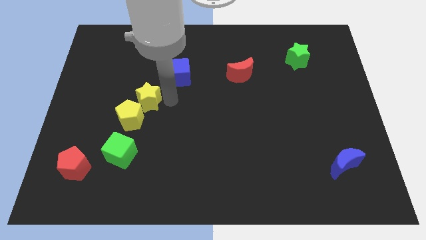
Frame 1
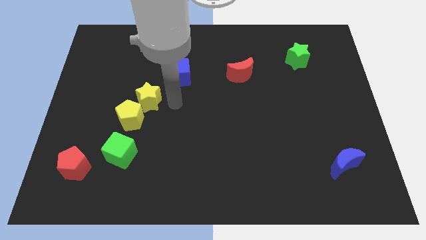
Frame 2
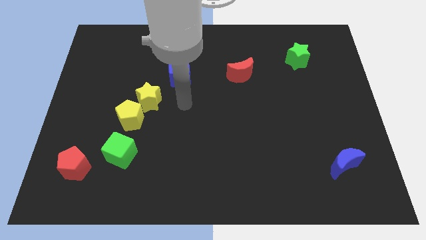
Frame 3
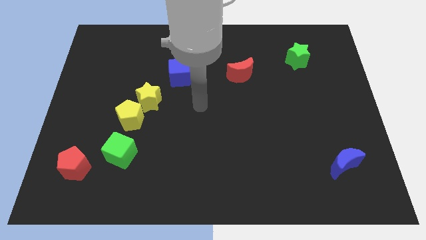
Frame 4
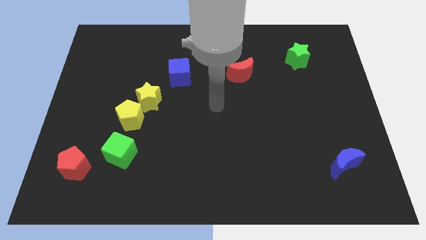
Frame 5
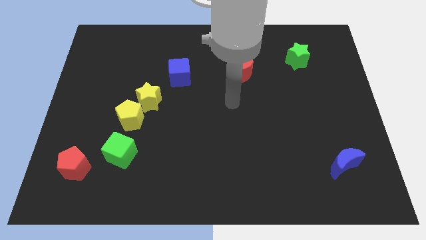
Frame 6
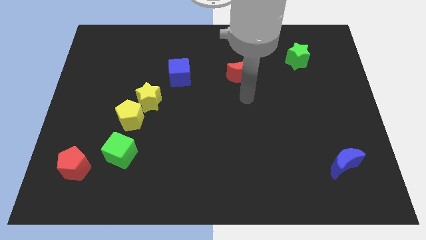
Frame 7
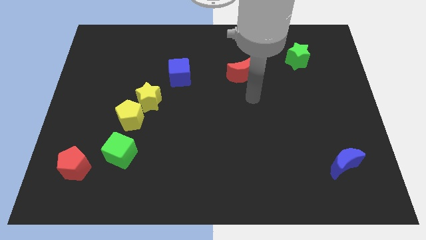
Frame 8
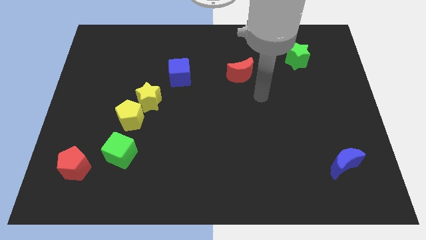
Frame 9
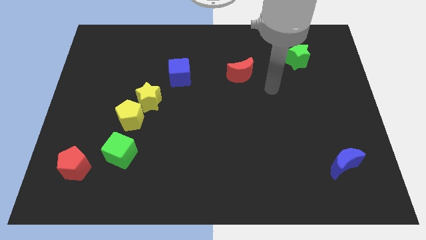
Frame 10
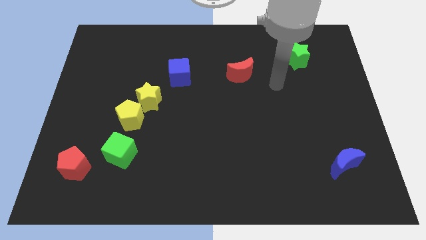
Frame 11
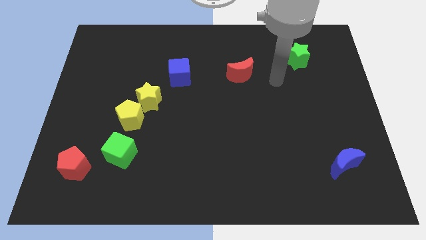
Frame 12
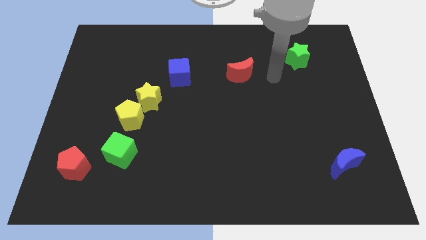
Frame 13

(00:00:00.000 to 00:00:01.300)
move your arm away from yellow star

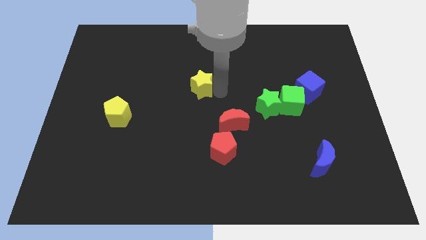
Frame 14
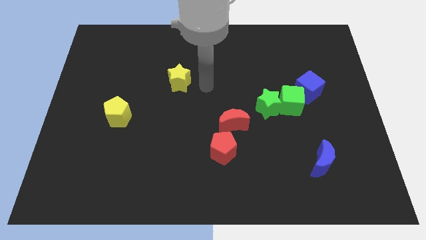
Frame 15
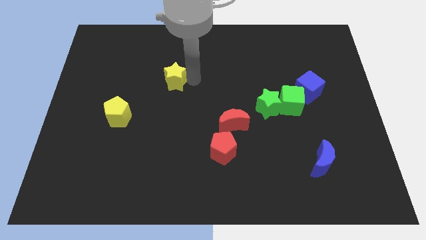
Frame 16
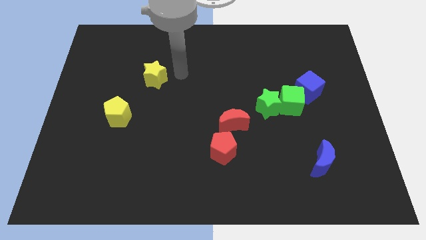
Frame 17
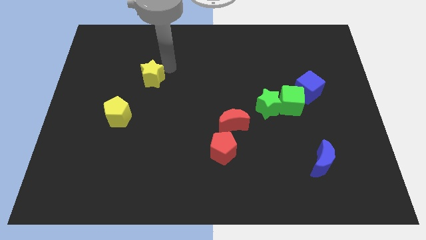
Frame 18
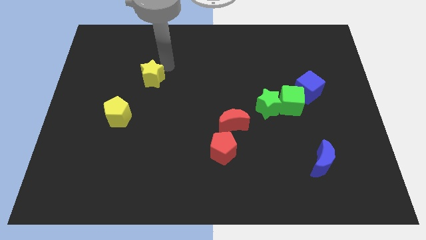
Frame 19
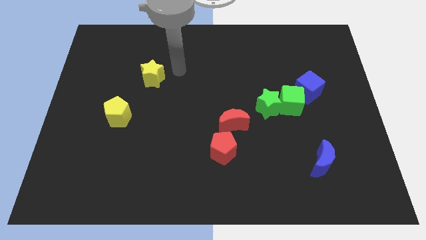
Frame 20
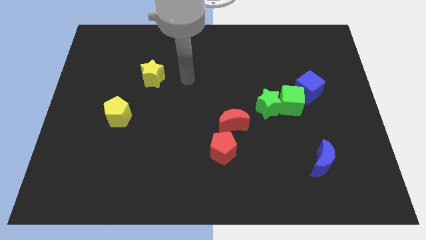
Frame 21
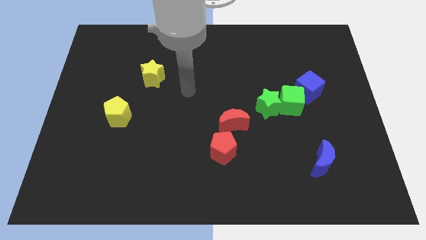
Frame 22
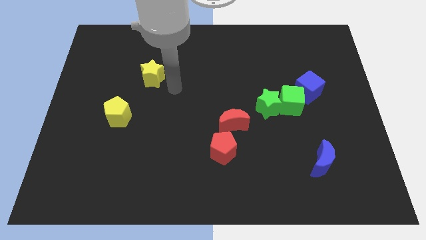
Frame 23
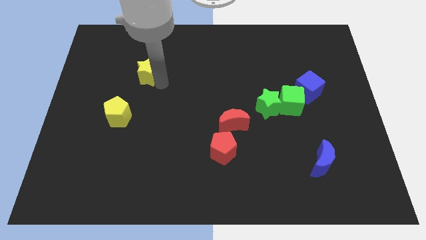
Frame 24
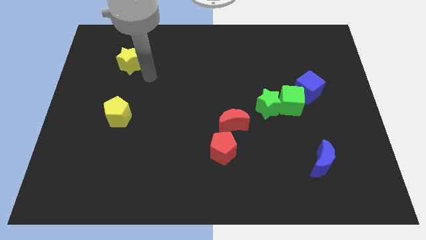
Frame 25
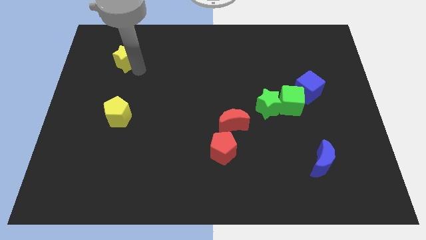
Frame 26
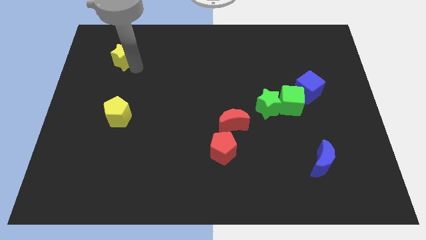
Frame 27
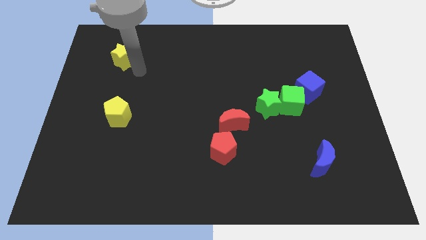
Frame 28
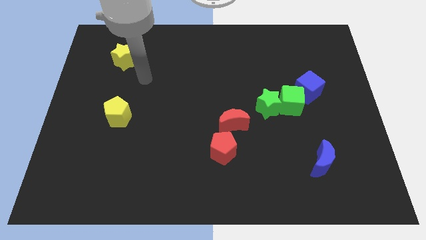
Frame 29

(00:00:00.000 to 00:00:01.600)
move the yellow star vertically to the top of the yellow pentagon

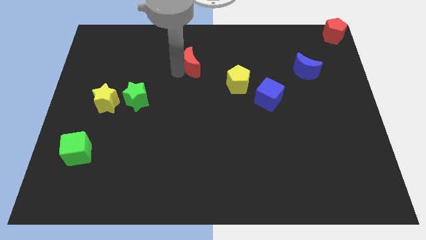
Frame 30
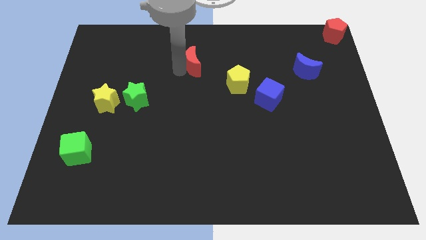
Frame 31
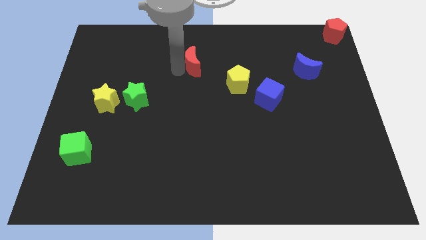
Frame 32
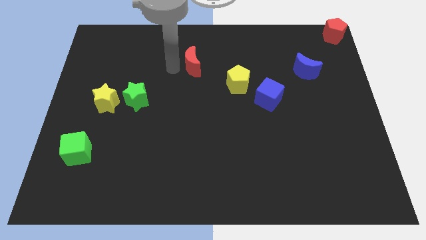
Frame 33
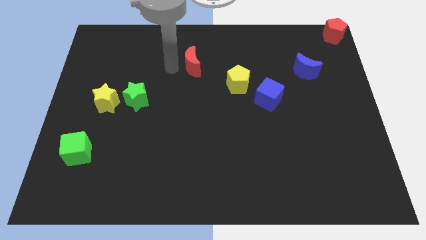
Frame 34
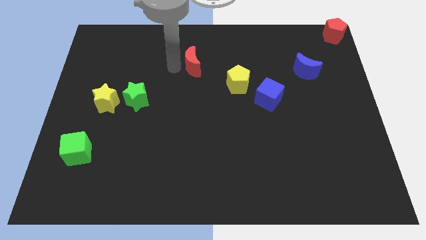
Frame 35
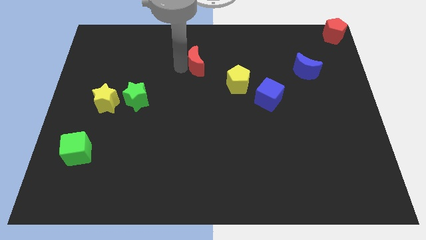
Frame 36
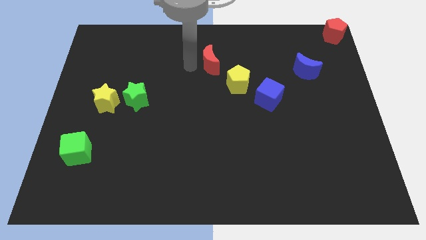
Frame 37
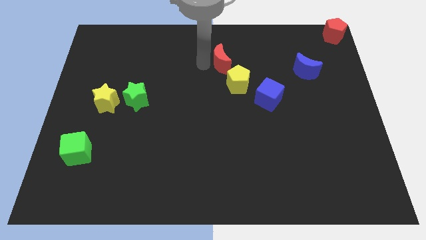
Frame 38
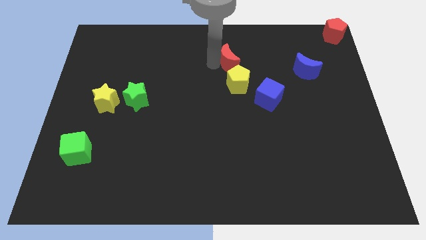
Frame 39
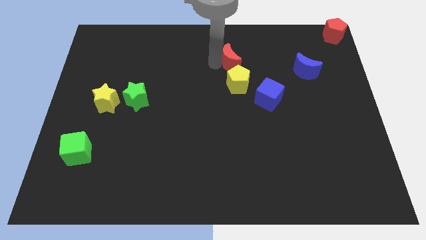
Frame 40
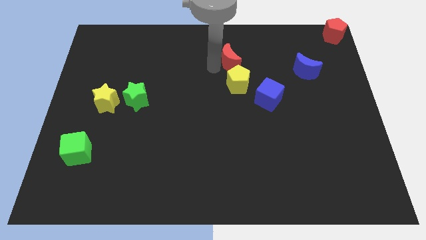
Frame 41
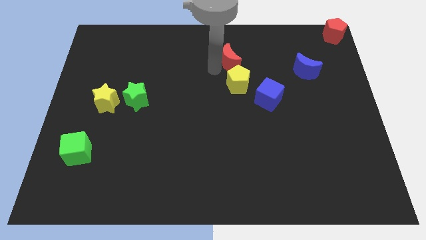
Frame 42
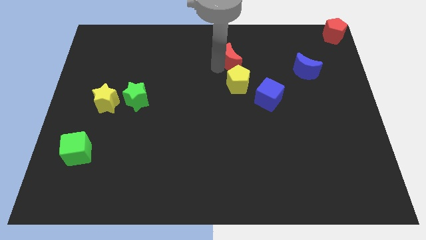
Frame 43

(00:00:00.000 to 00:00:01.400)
put the red crescent above the yellow pentagon

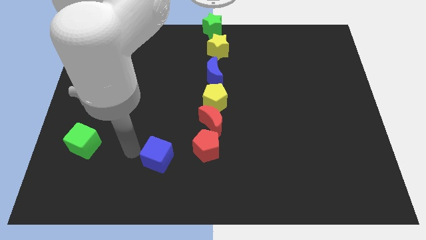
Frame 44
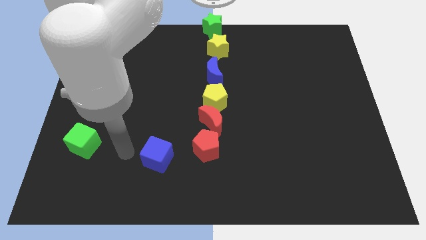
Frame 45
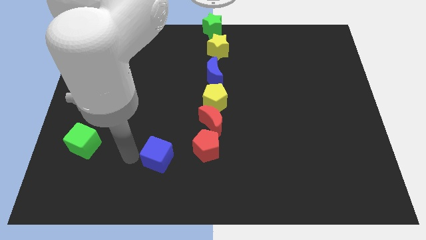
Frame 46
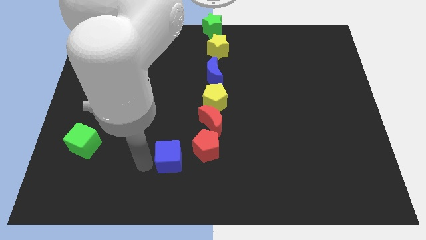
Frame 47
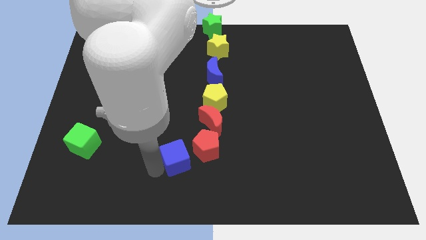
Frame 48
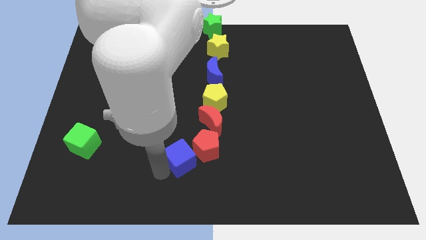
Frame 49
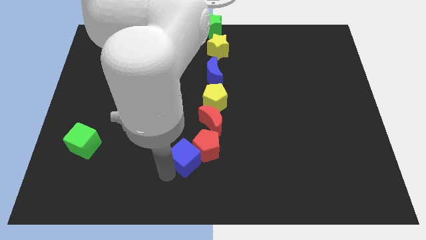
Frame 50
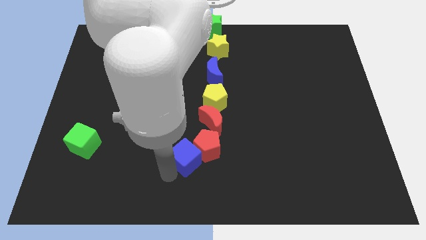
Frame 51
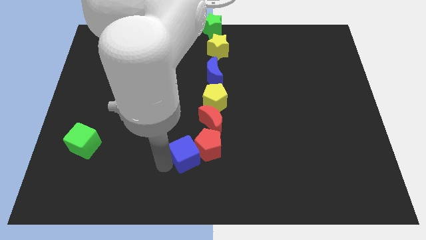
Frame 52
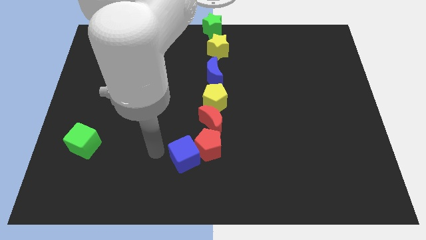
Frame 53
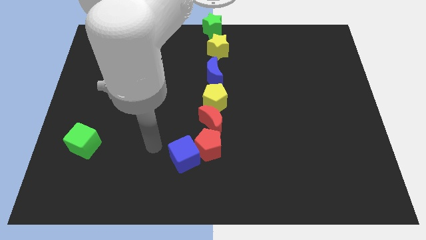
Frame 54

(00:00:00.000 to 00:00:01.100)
push the blue cube close to thered pentagon

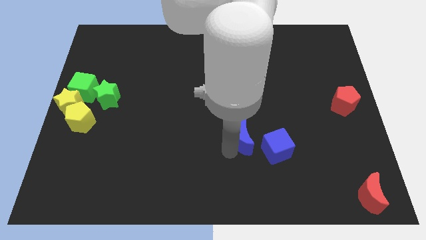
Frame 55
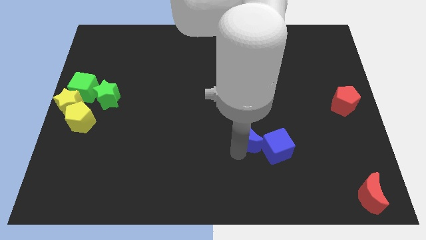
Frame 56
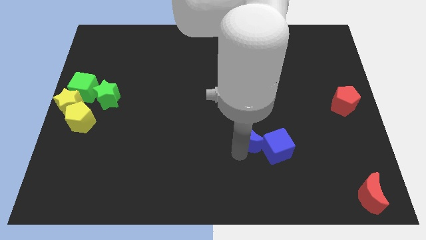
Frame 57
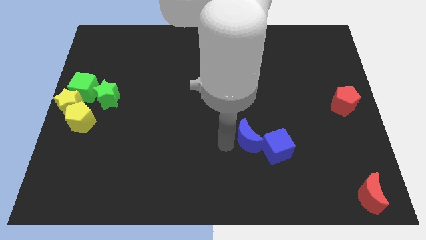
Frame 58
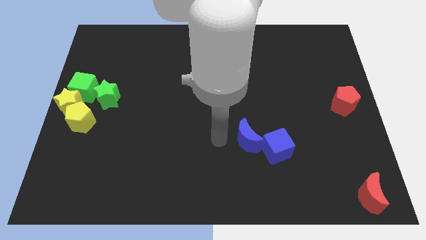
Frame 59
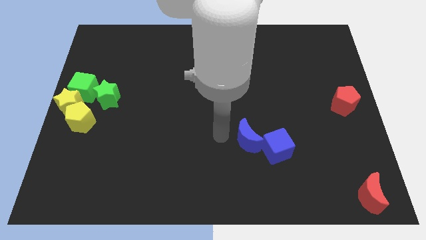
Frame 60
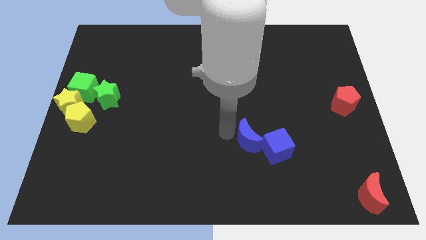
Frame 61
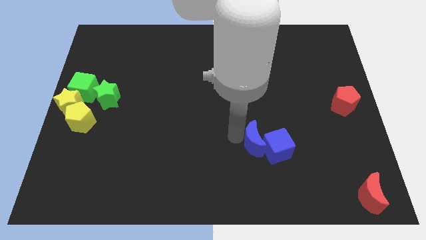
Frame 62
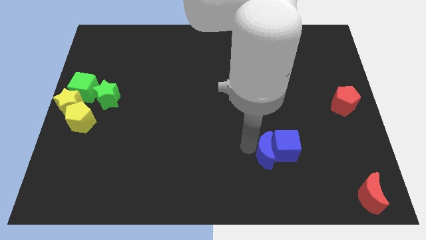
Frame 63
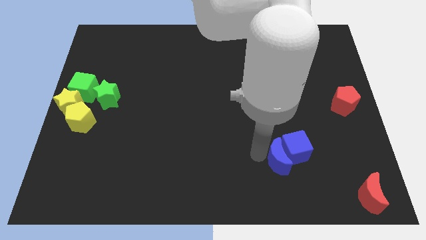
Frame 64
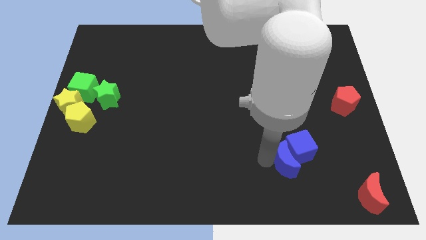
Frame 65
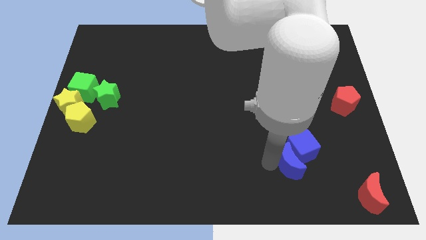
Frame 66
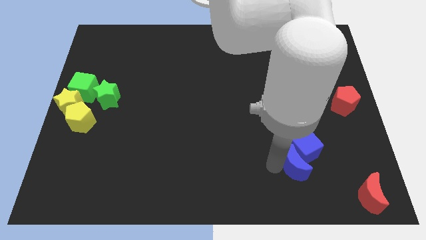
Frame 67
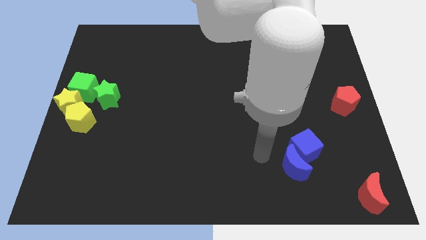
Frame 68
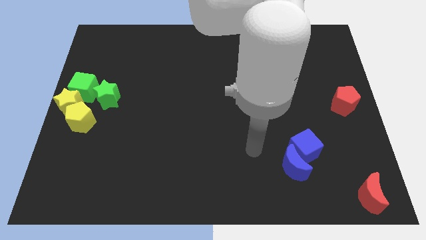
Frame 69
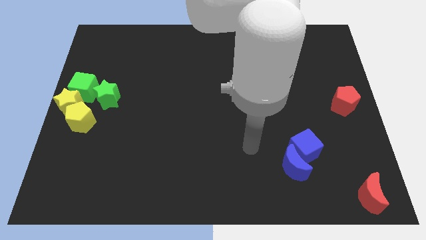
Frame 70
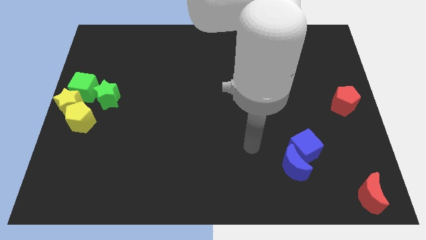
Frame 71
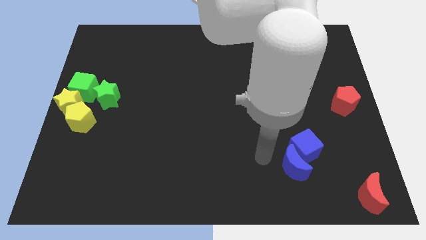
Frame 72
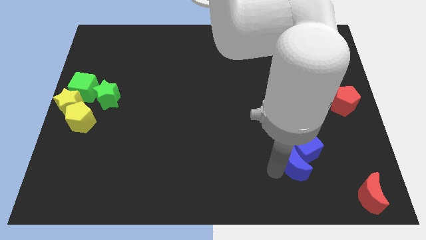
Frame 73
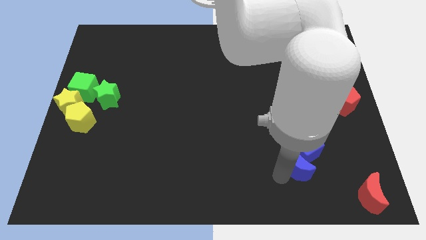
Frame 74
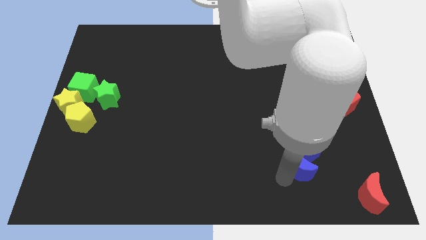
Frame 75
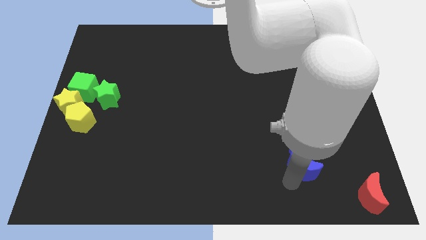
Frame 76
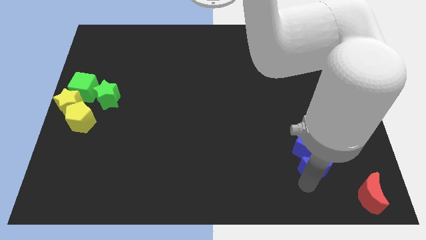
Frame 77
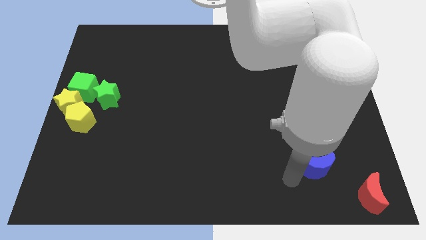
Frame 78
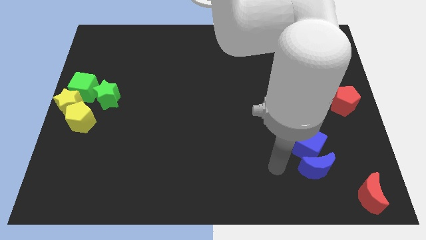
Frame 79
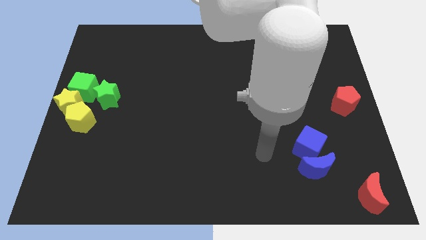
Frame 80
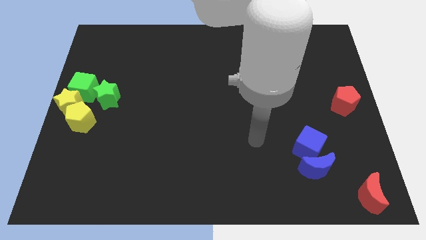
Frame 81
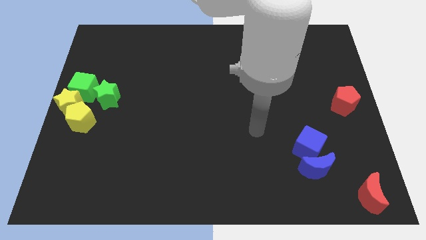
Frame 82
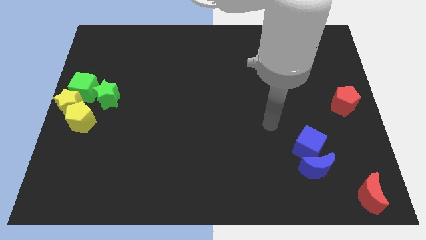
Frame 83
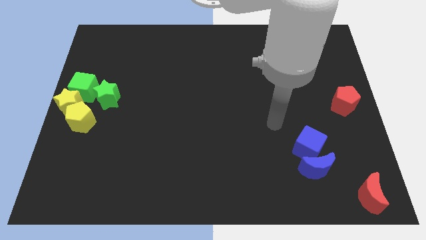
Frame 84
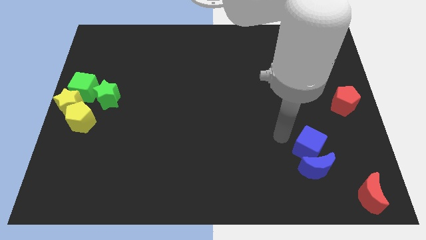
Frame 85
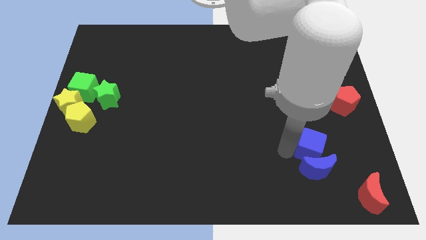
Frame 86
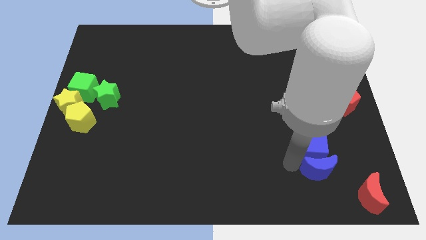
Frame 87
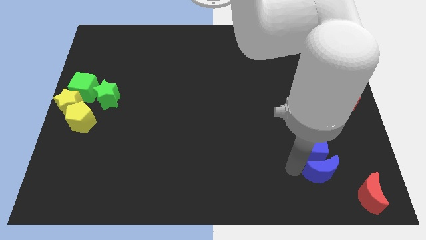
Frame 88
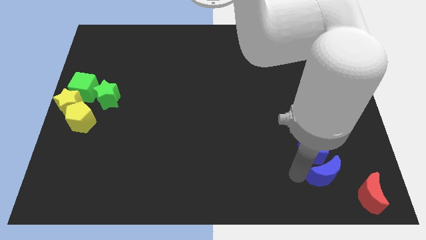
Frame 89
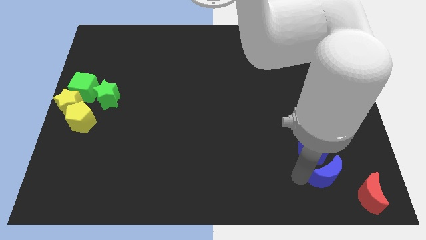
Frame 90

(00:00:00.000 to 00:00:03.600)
push the blue blocks towards the bottom right corner of the board
